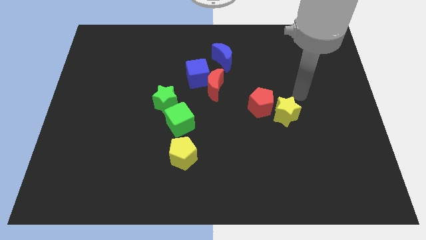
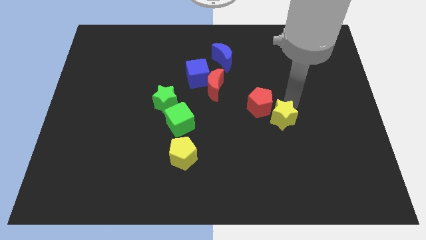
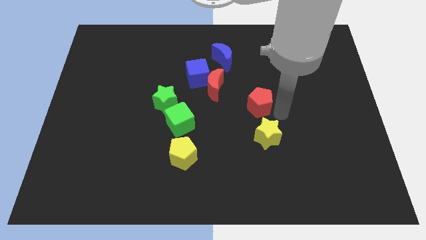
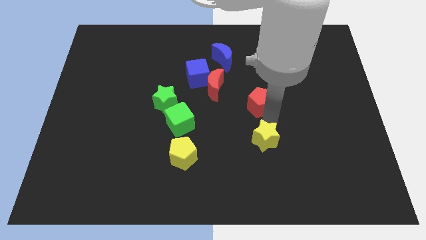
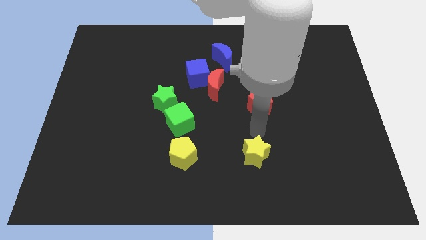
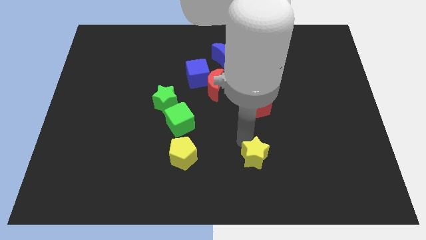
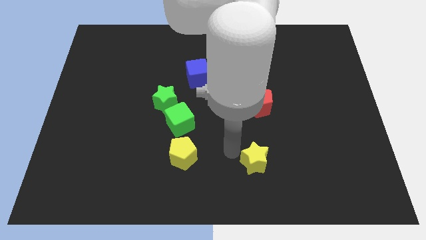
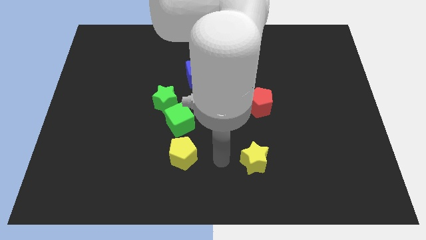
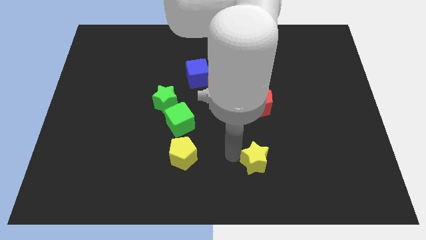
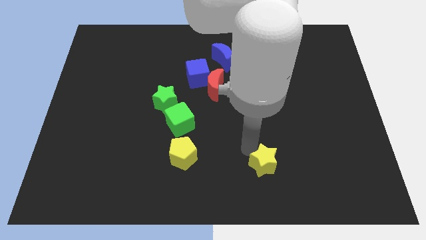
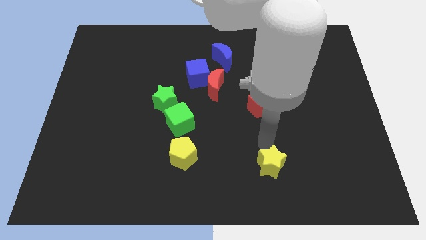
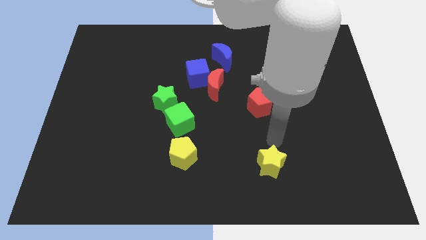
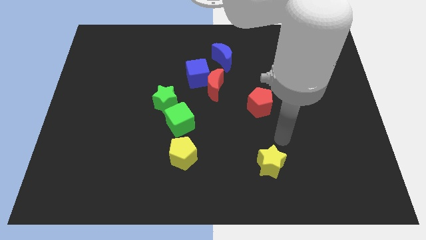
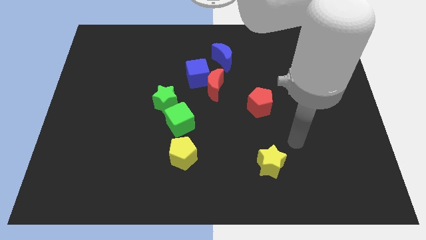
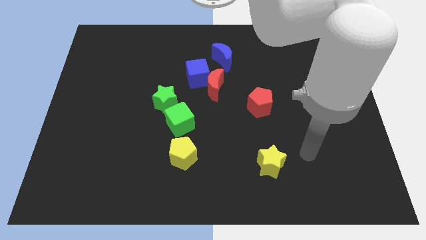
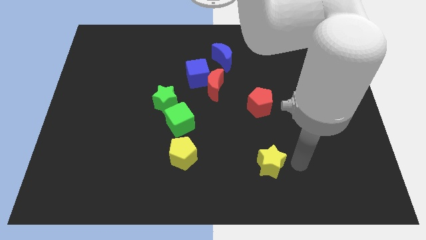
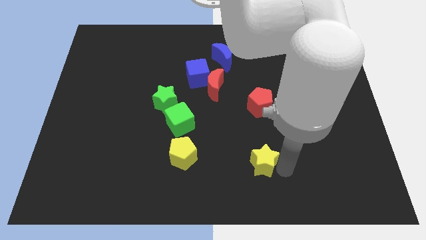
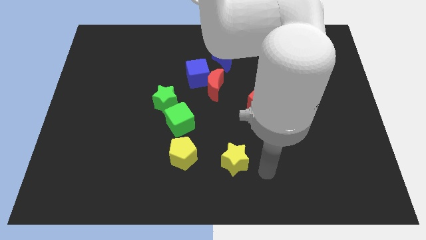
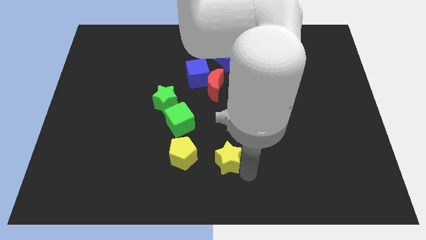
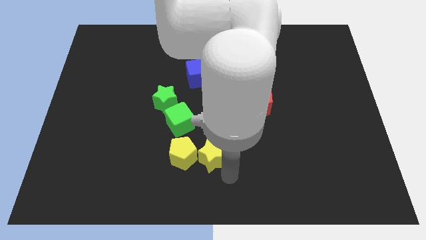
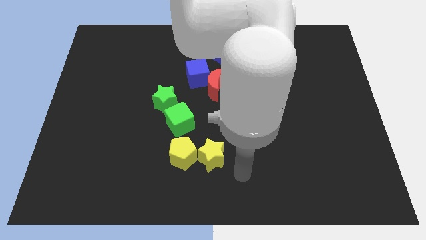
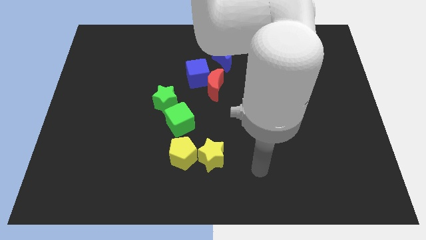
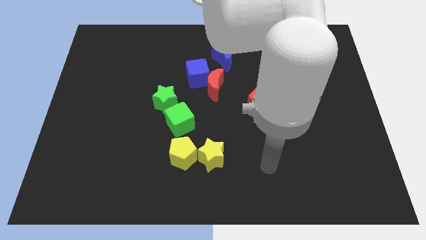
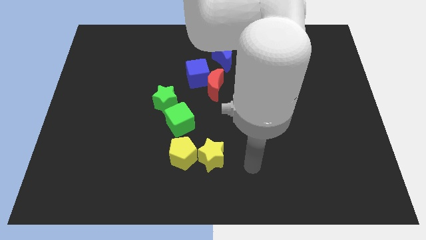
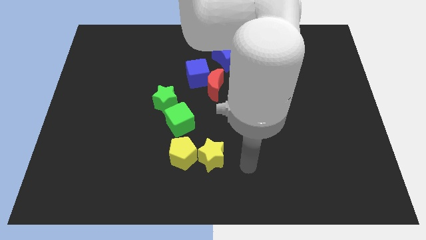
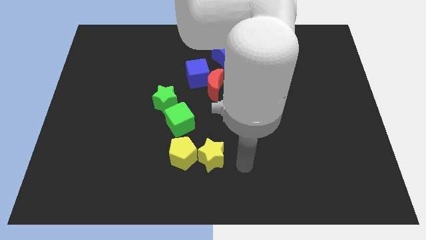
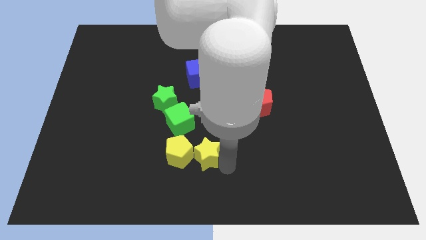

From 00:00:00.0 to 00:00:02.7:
place the yellow star to the right of the yellow pentagon

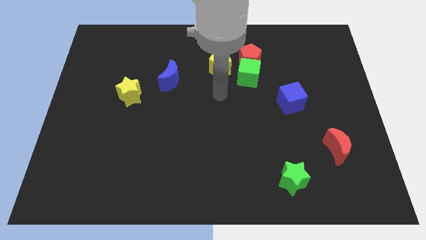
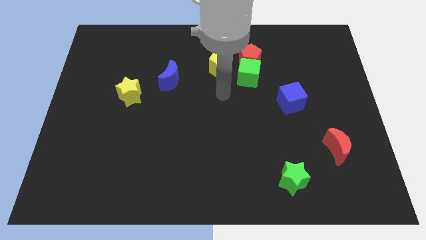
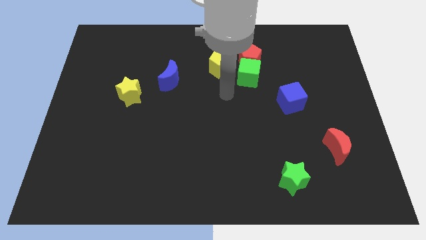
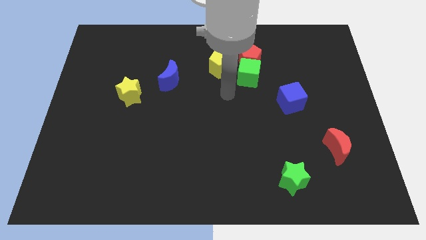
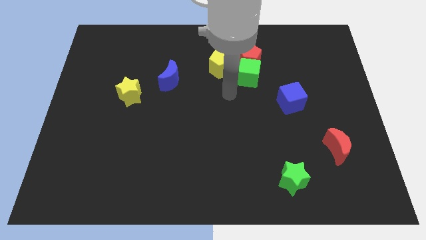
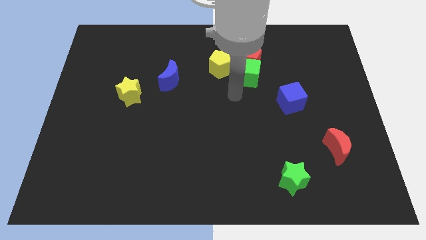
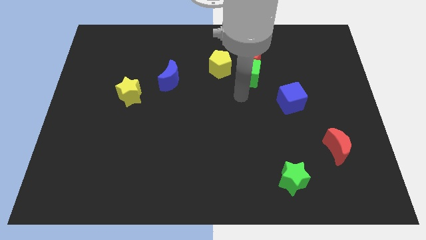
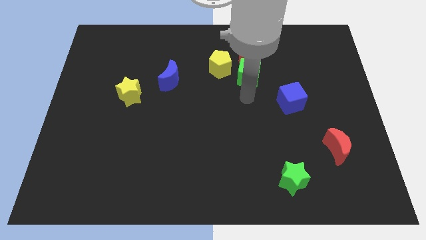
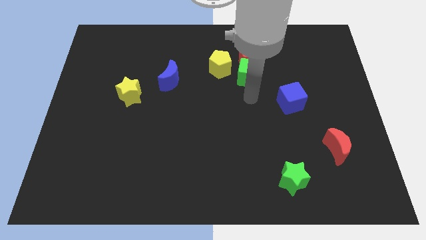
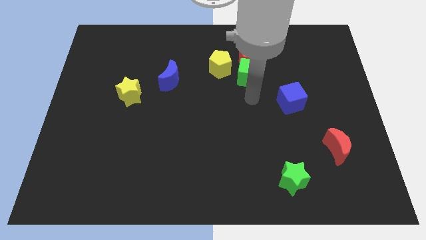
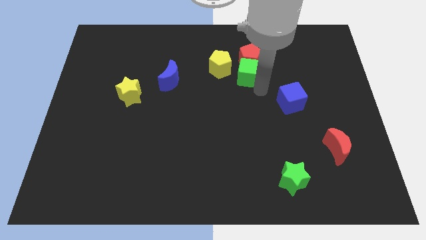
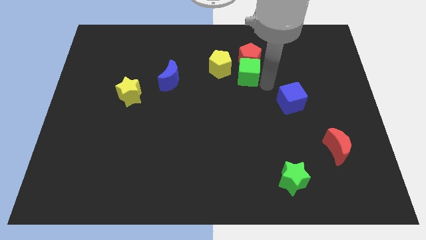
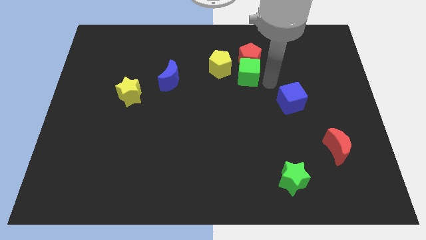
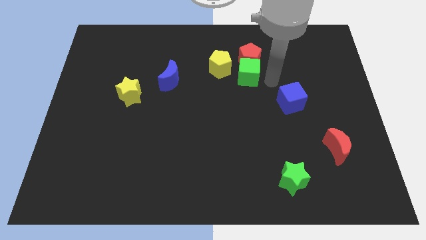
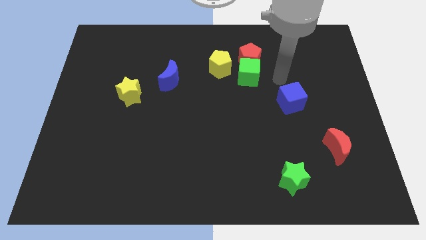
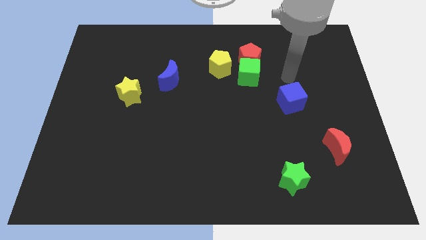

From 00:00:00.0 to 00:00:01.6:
move the arm above the blue cube

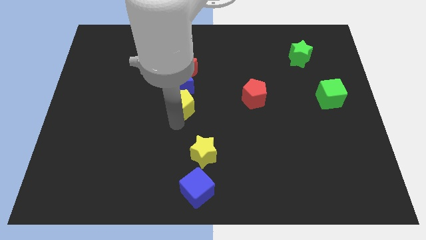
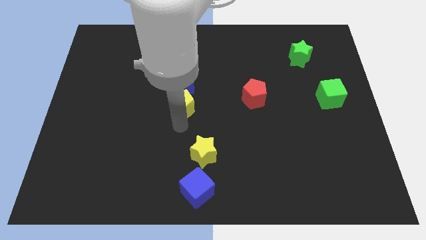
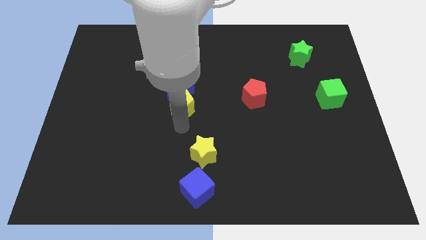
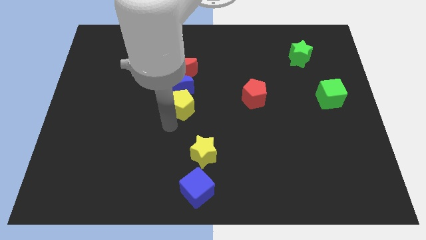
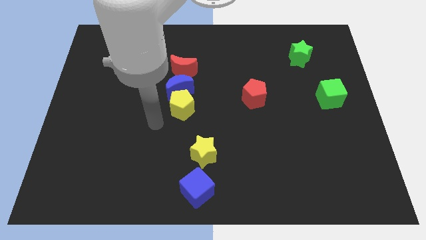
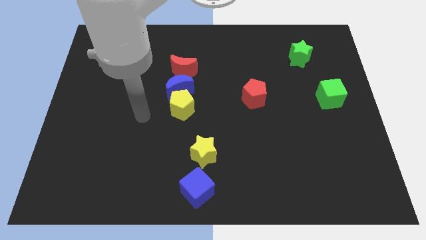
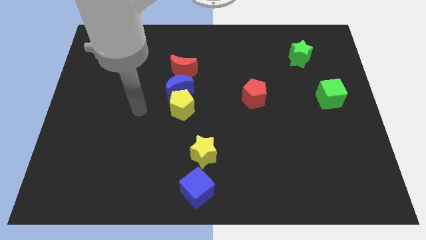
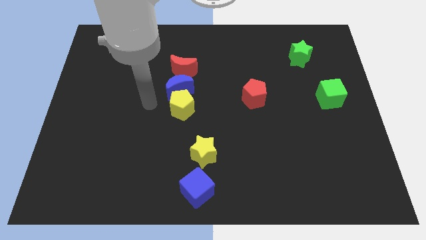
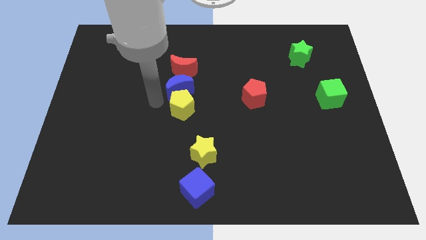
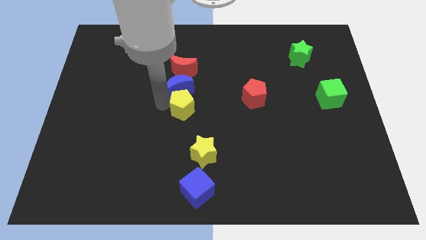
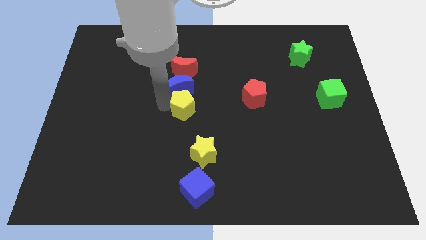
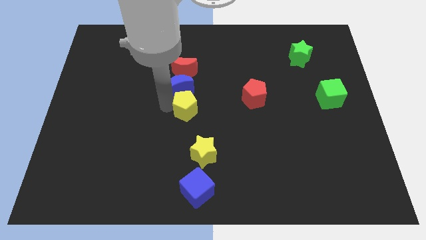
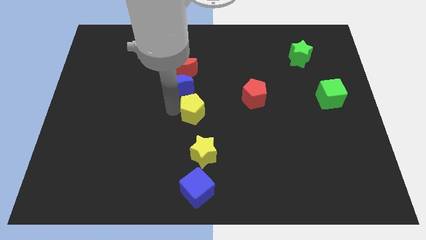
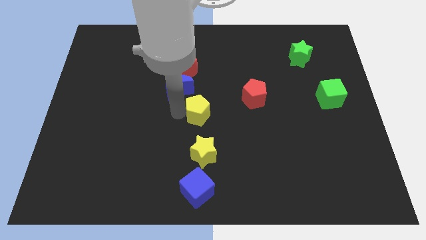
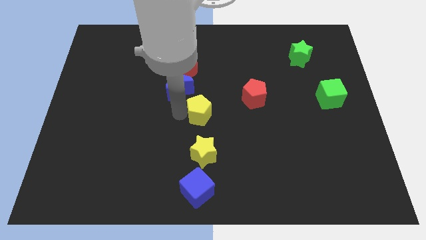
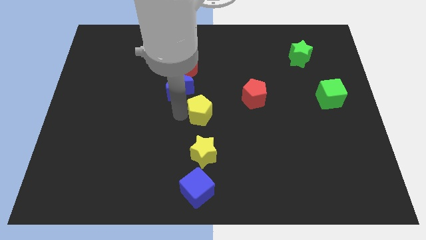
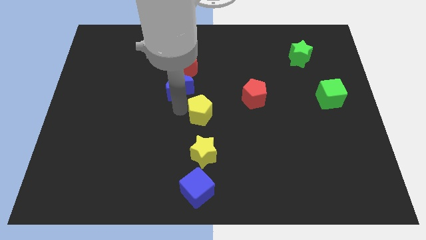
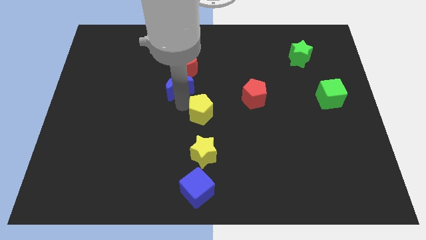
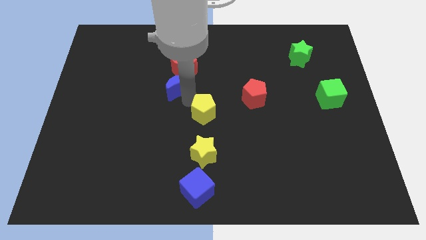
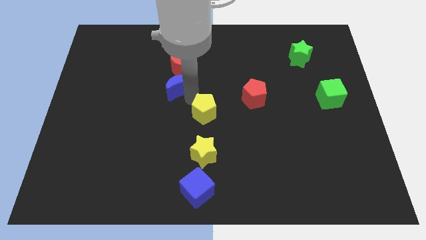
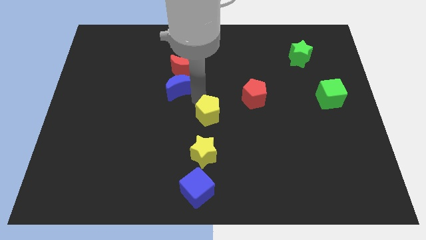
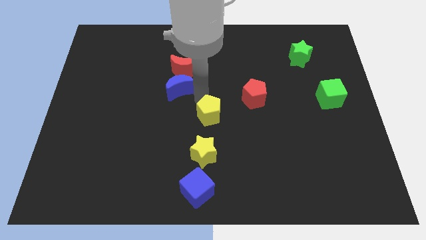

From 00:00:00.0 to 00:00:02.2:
place the yellow pentagon above the yellow star

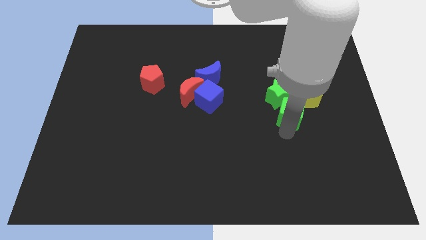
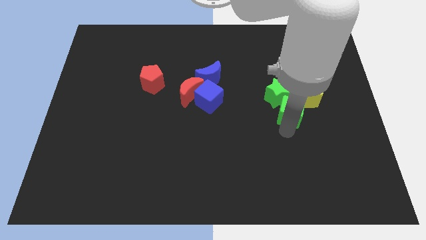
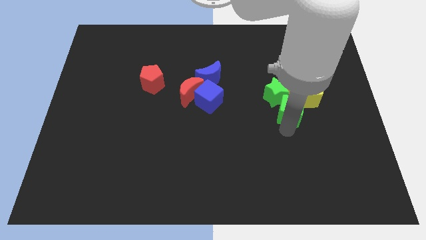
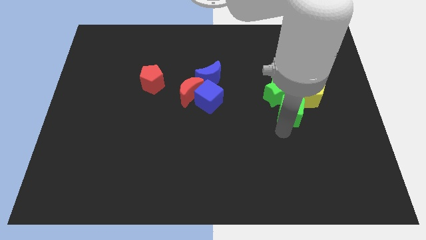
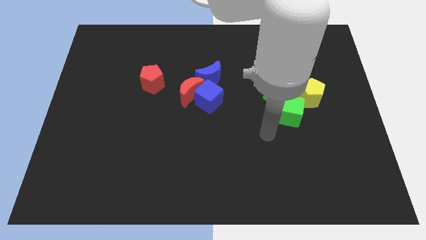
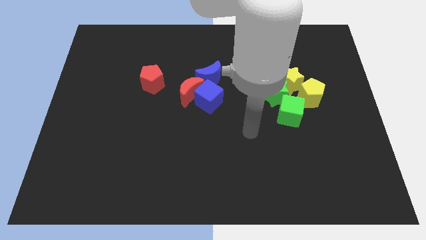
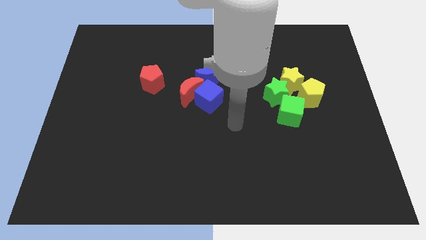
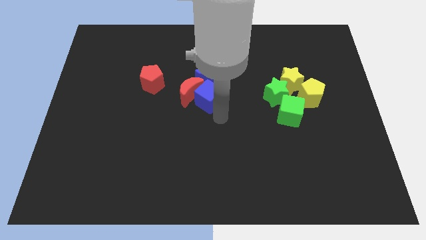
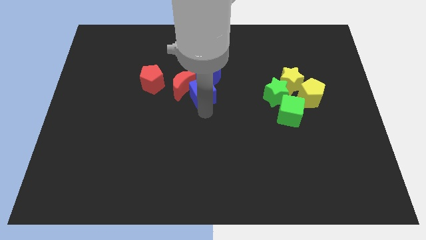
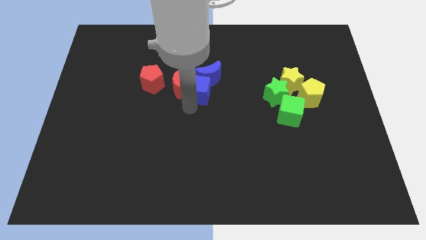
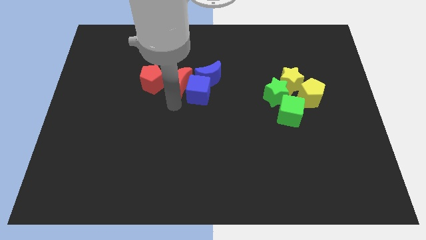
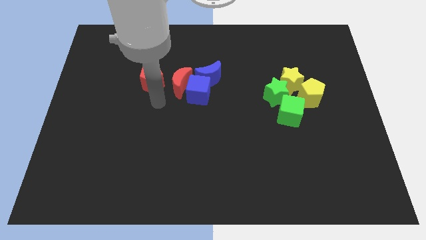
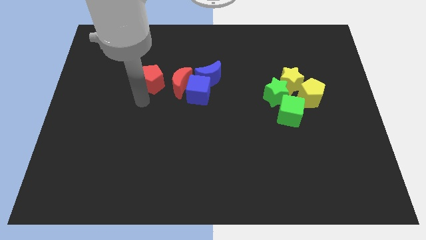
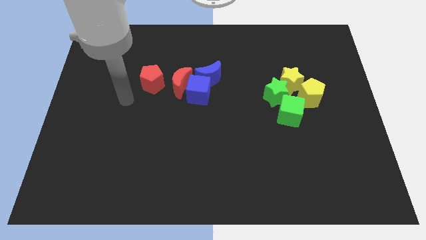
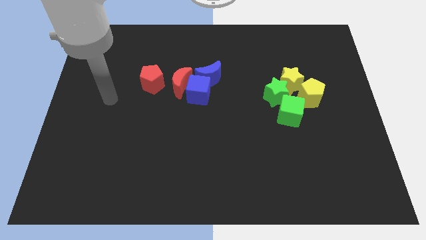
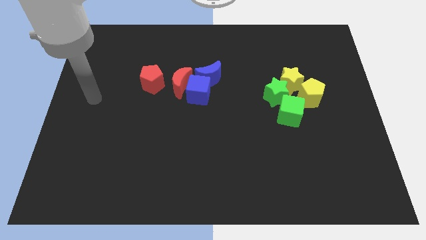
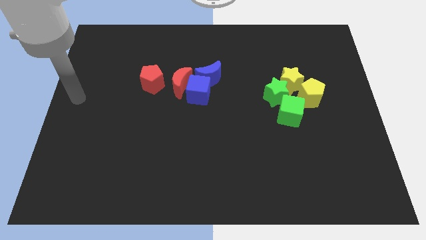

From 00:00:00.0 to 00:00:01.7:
move the arm towards the left side of the board

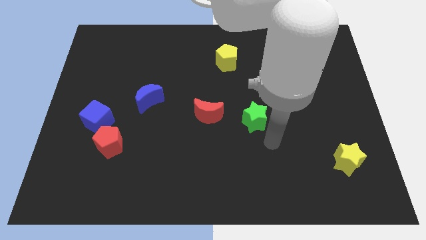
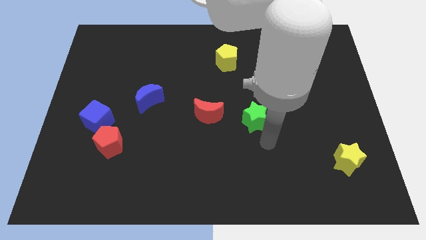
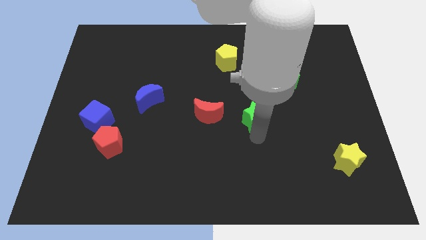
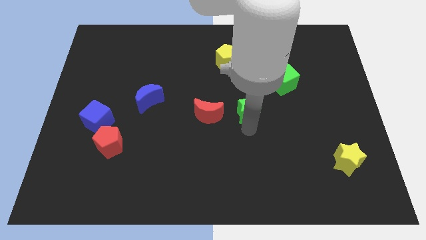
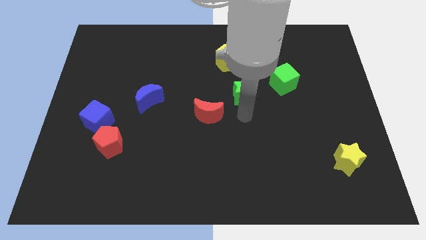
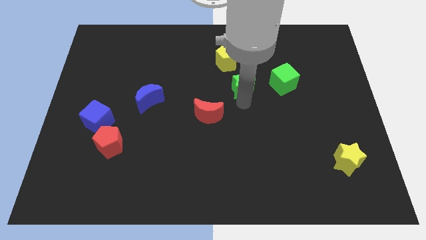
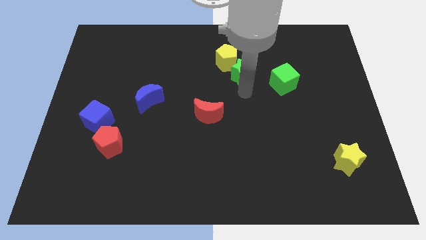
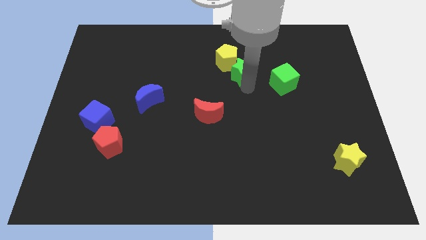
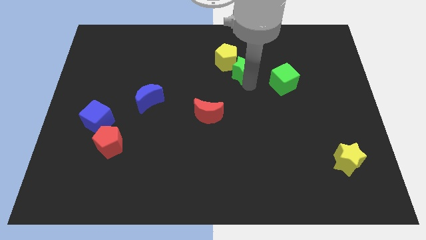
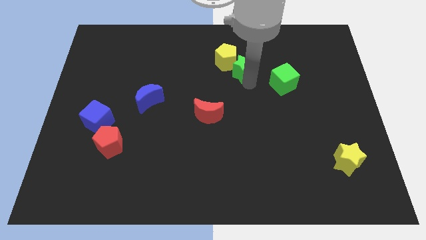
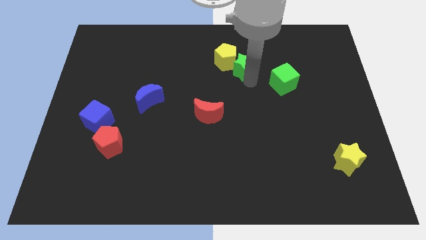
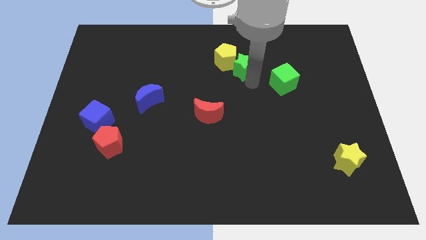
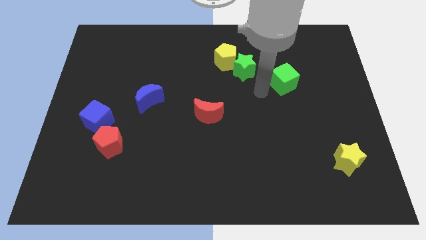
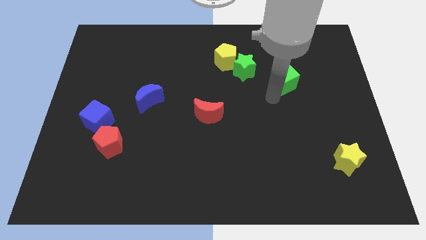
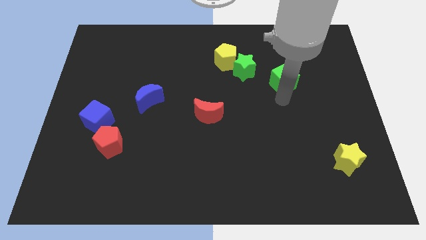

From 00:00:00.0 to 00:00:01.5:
push the green star into the yellow pentagon
